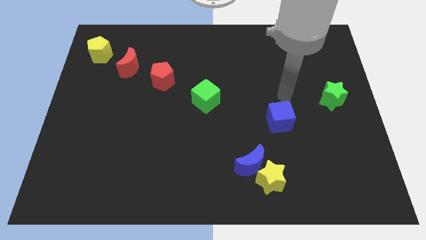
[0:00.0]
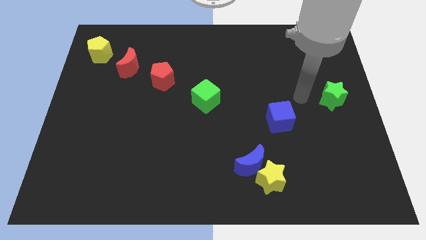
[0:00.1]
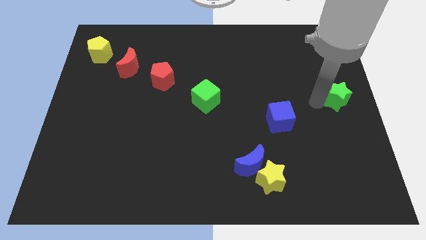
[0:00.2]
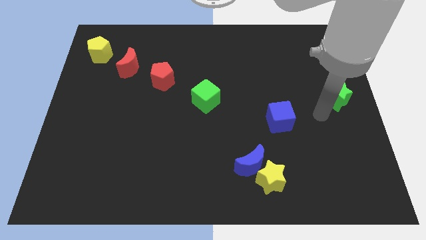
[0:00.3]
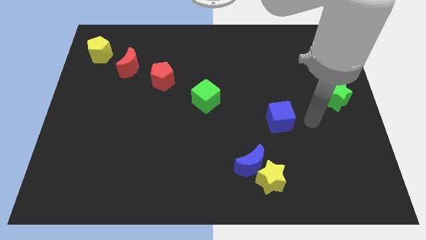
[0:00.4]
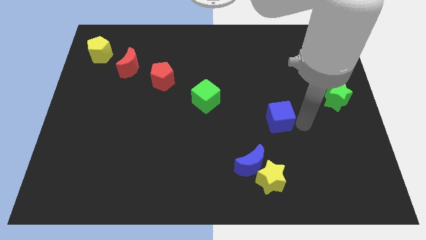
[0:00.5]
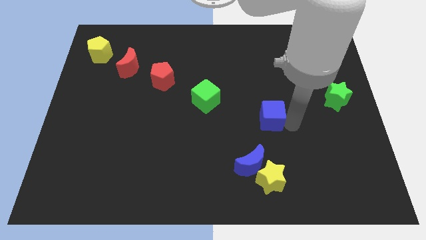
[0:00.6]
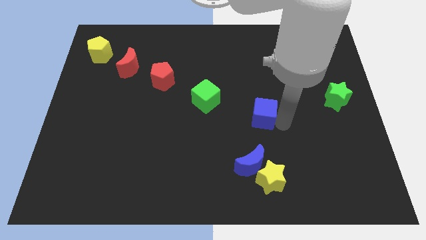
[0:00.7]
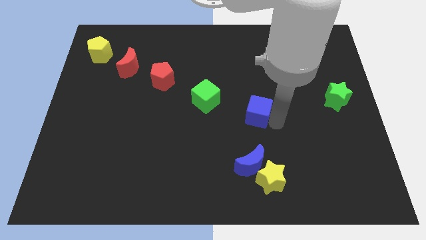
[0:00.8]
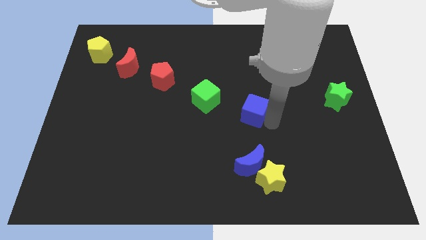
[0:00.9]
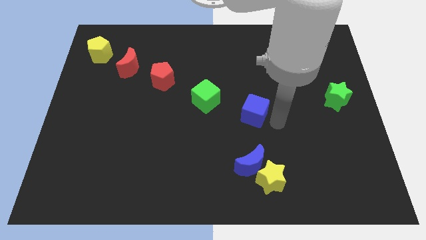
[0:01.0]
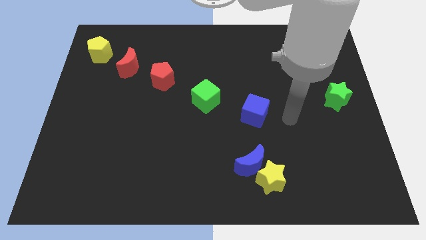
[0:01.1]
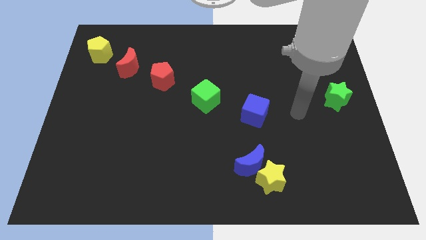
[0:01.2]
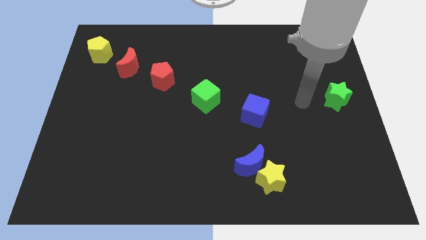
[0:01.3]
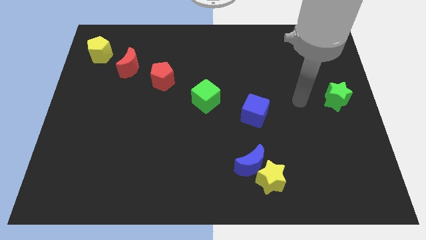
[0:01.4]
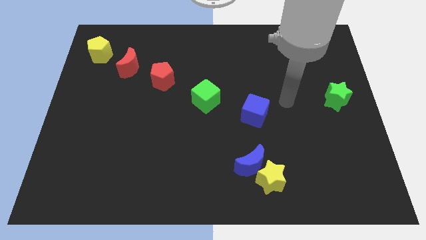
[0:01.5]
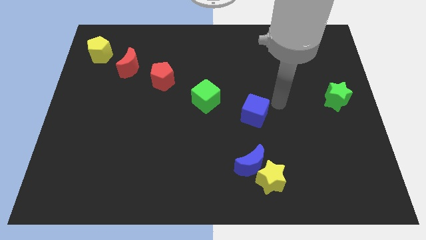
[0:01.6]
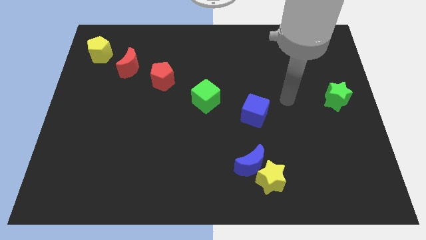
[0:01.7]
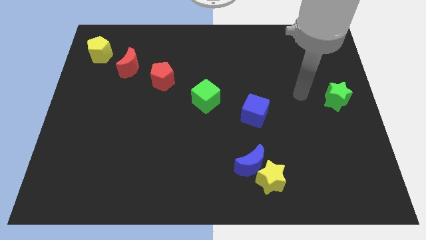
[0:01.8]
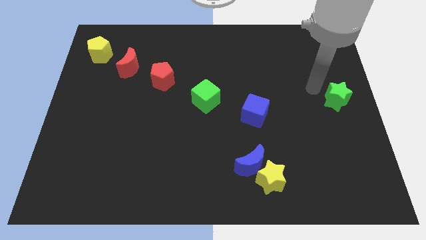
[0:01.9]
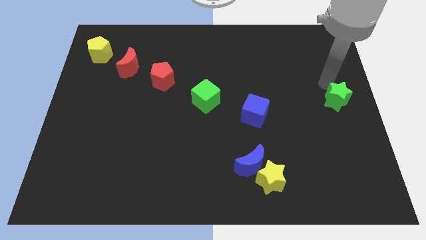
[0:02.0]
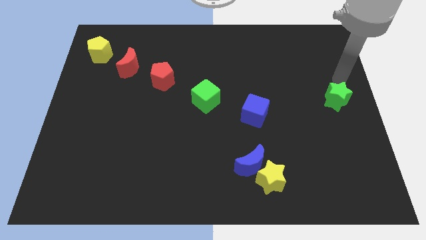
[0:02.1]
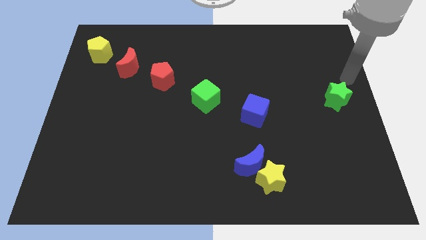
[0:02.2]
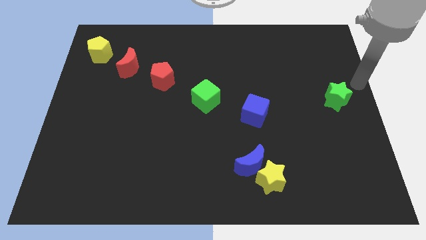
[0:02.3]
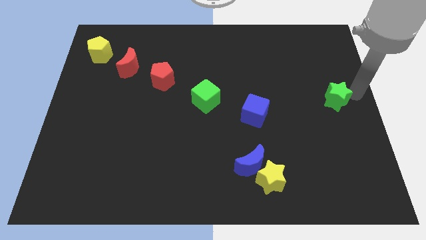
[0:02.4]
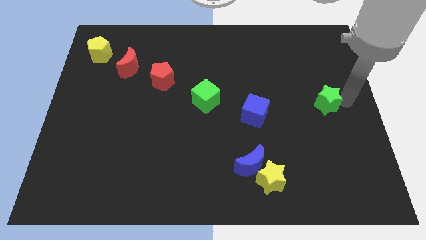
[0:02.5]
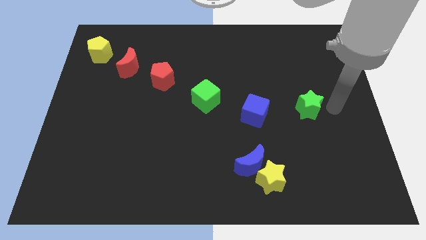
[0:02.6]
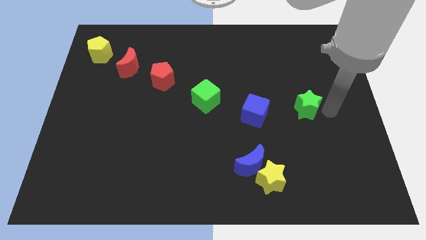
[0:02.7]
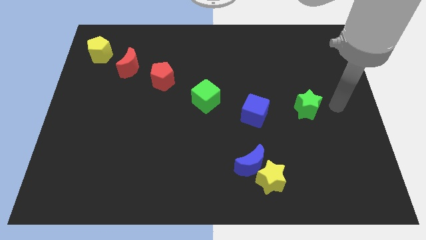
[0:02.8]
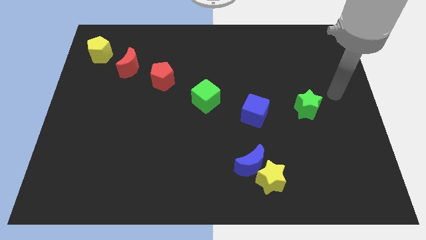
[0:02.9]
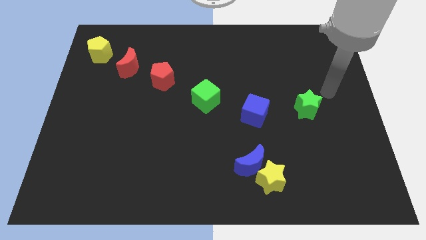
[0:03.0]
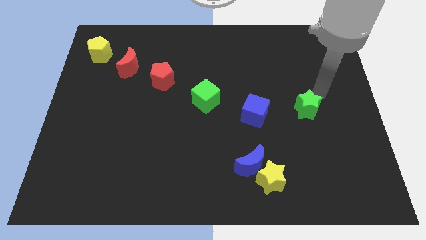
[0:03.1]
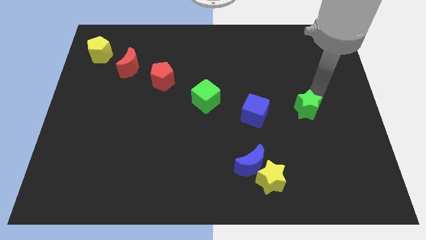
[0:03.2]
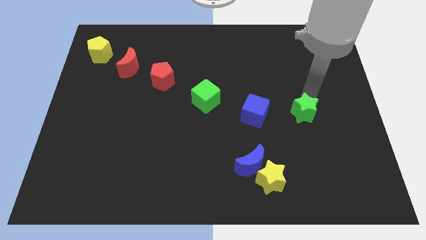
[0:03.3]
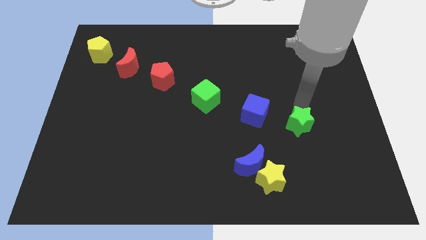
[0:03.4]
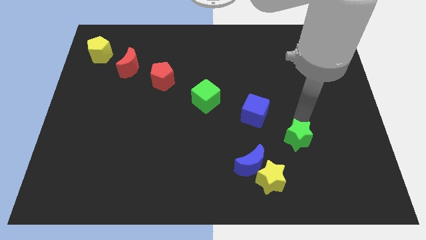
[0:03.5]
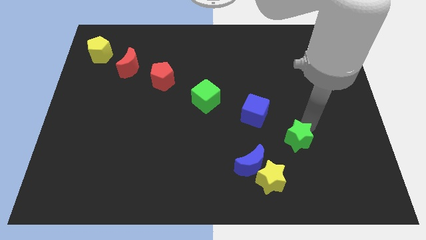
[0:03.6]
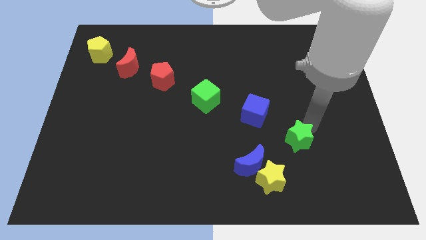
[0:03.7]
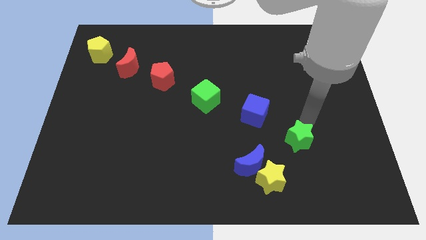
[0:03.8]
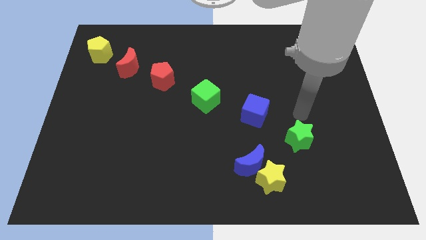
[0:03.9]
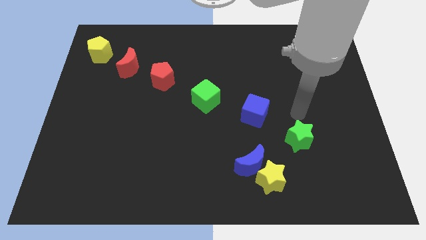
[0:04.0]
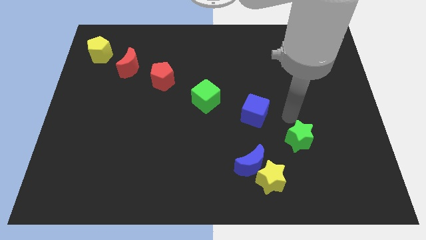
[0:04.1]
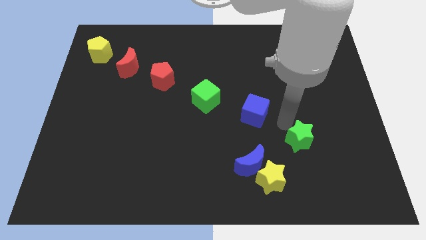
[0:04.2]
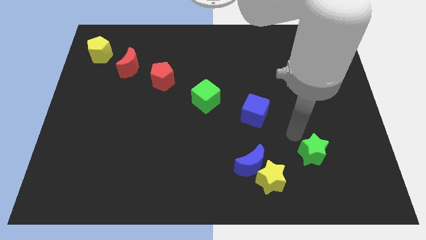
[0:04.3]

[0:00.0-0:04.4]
move the green star diagonal to the blue cube

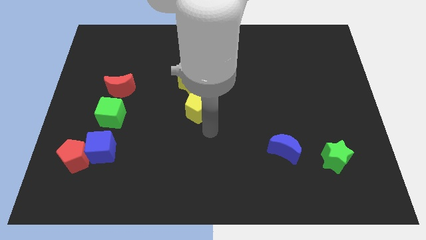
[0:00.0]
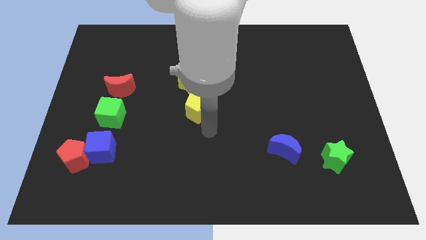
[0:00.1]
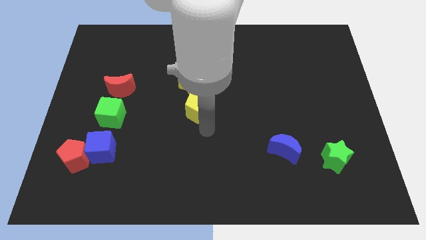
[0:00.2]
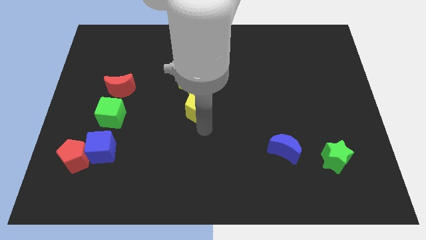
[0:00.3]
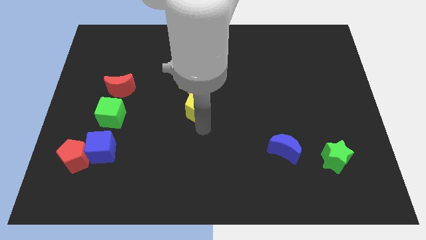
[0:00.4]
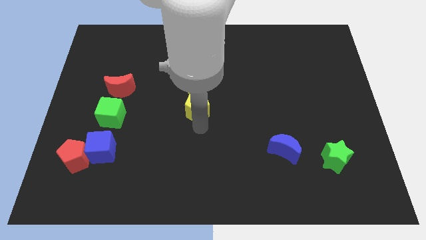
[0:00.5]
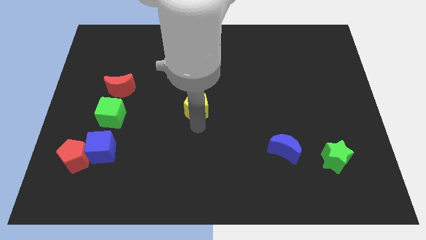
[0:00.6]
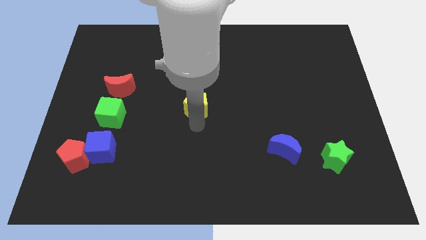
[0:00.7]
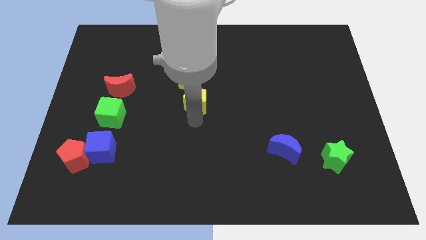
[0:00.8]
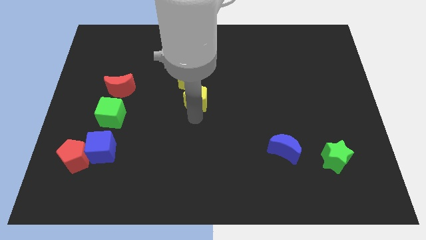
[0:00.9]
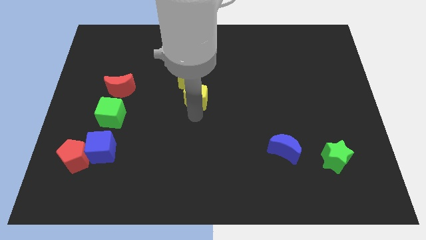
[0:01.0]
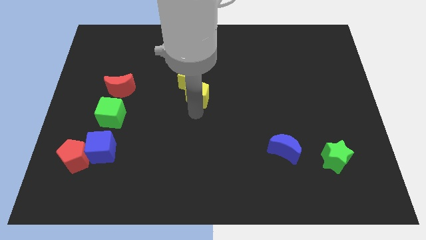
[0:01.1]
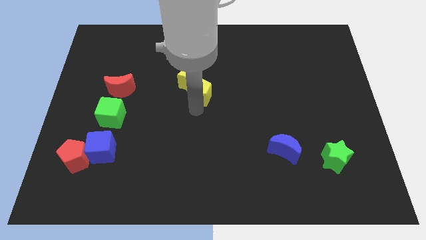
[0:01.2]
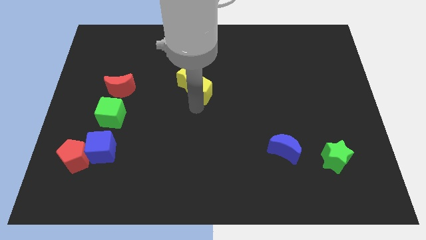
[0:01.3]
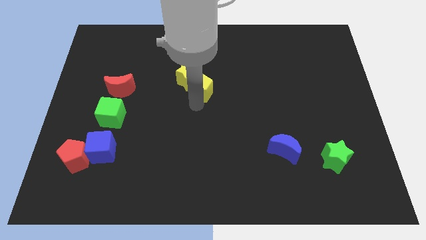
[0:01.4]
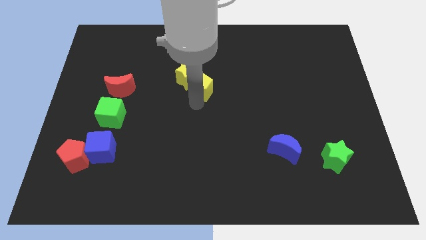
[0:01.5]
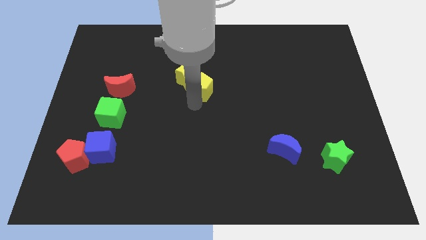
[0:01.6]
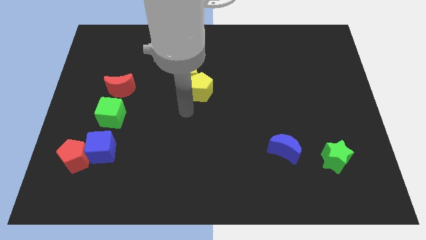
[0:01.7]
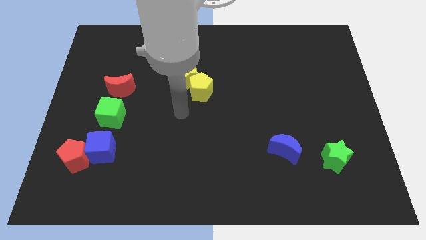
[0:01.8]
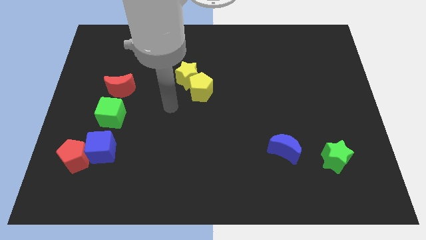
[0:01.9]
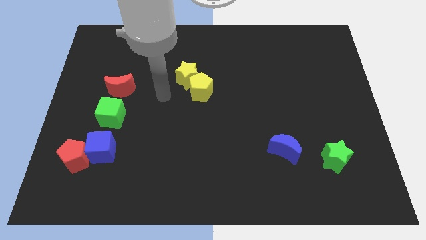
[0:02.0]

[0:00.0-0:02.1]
slide yellow pentagon into yellow star

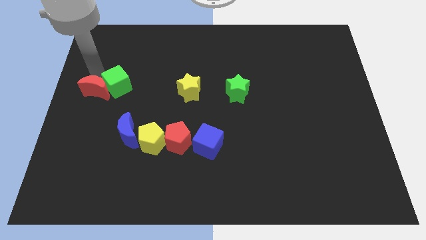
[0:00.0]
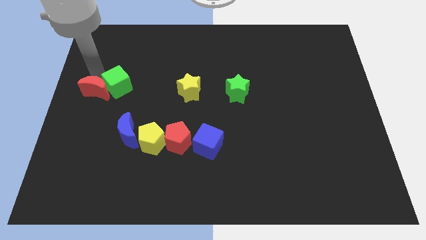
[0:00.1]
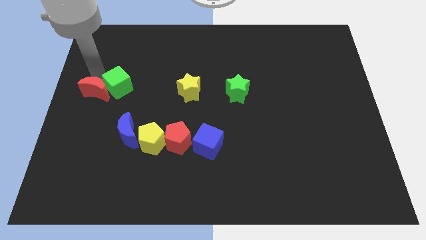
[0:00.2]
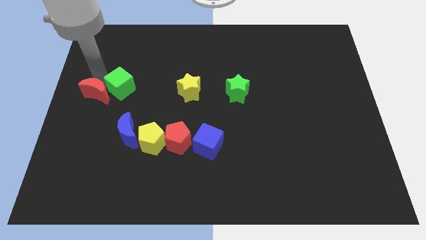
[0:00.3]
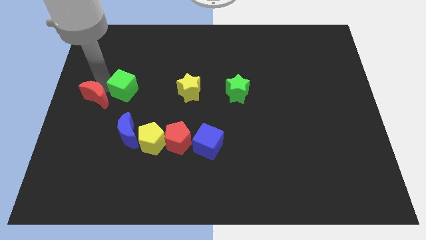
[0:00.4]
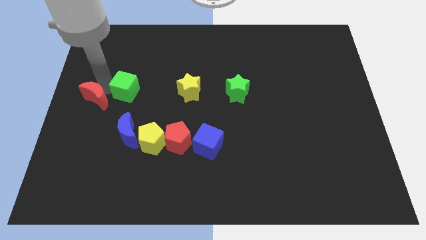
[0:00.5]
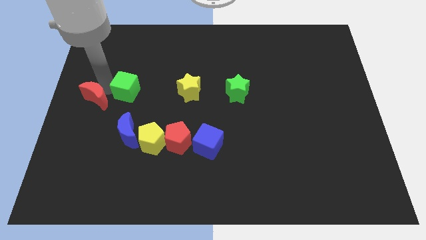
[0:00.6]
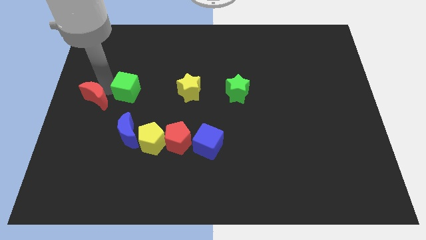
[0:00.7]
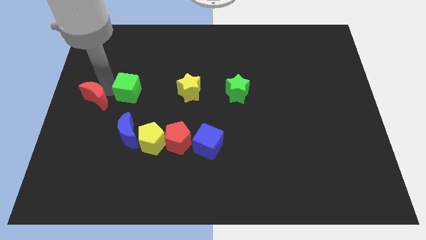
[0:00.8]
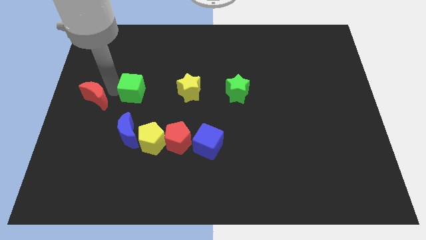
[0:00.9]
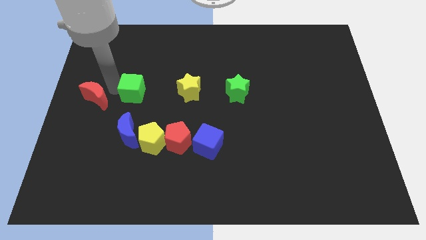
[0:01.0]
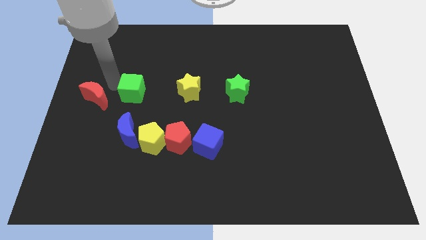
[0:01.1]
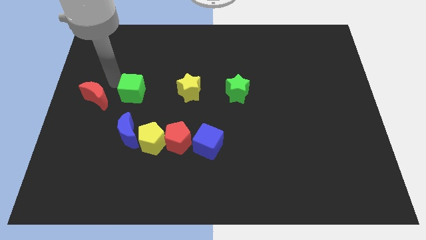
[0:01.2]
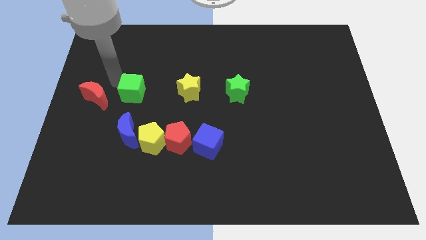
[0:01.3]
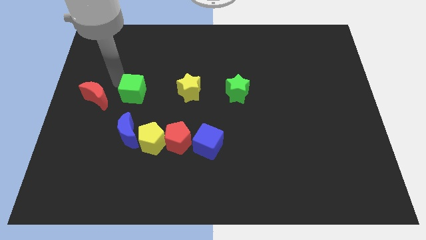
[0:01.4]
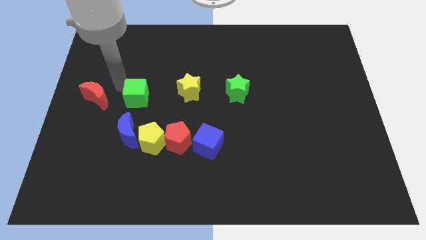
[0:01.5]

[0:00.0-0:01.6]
move the green cube diagonal to the left of the yellow star

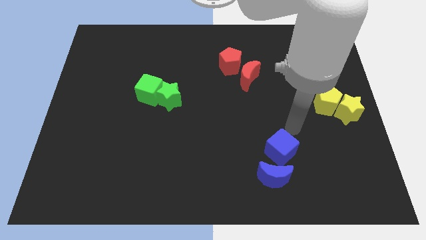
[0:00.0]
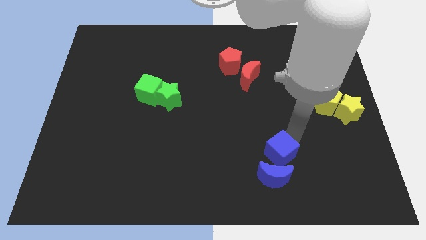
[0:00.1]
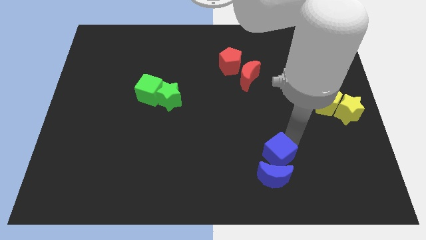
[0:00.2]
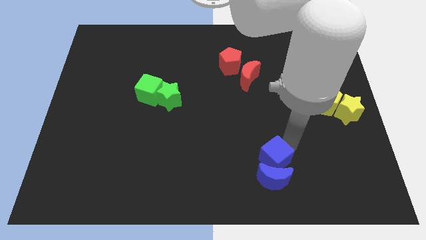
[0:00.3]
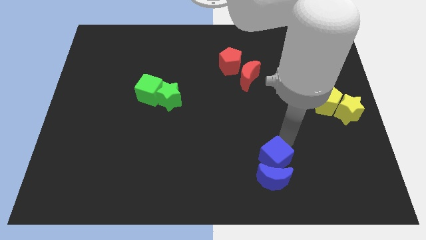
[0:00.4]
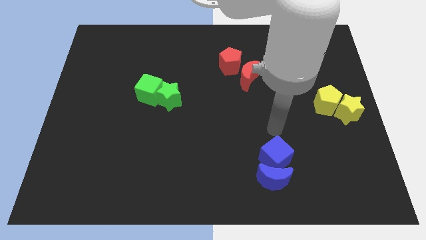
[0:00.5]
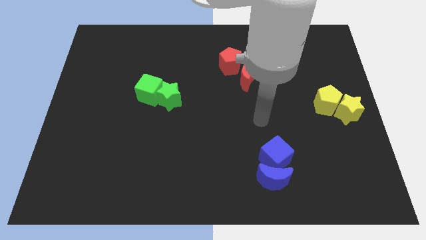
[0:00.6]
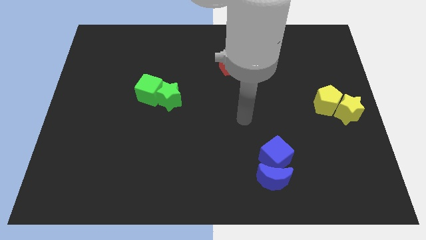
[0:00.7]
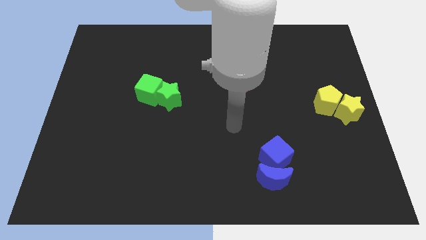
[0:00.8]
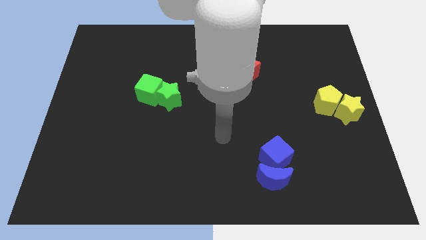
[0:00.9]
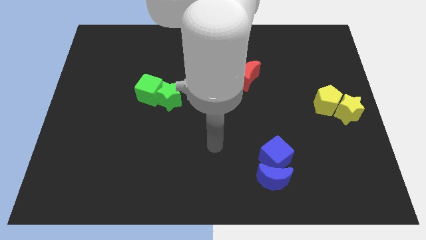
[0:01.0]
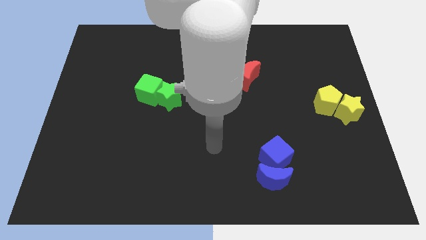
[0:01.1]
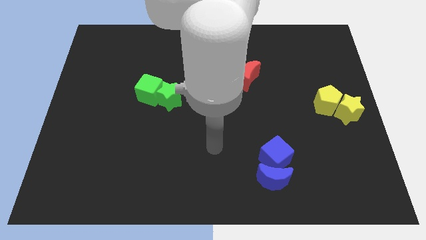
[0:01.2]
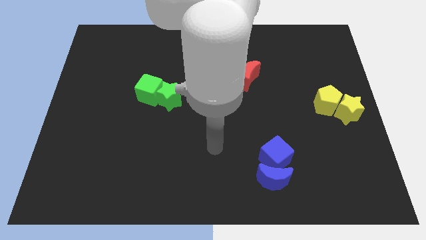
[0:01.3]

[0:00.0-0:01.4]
push the blue cube into the blue semicircle
